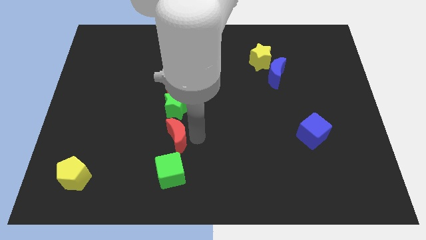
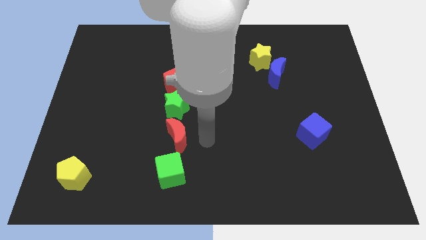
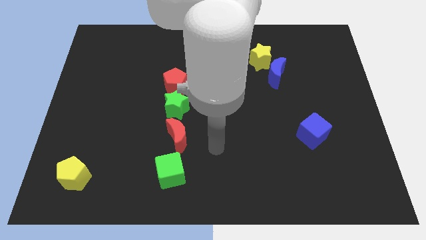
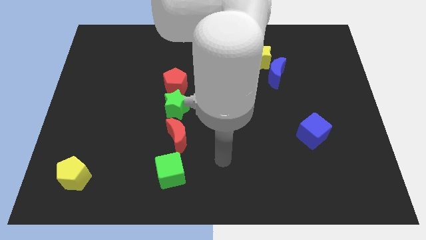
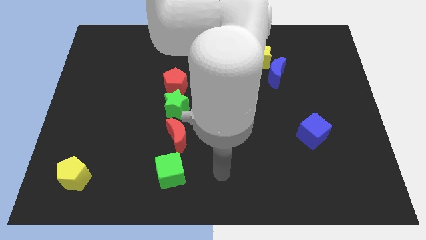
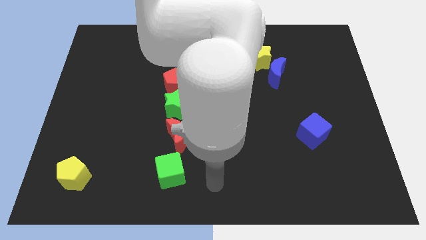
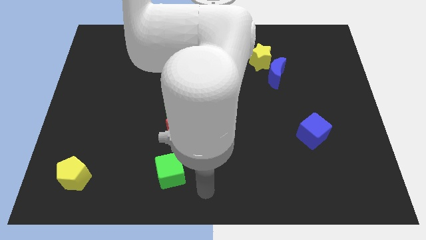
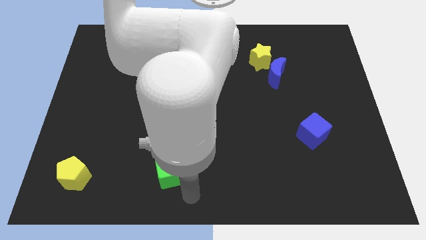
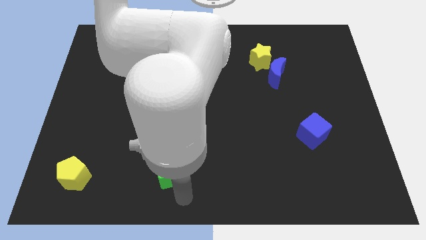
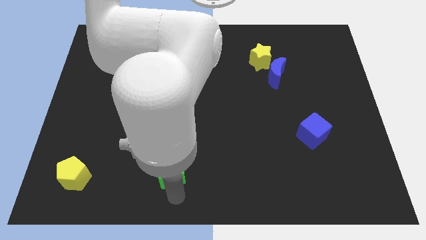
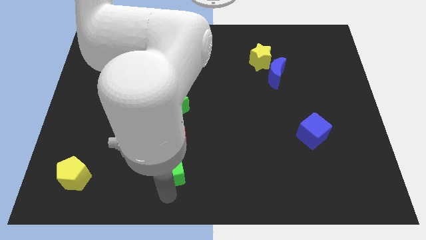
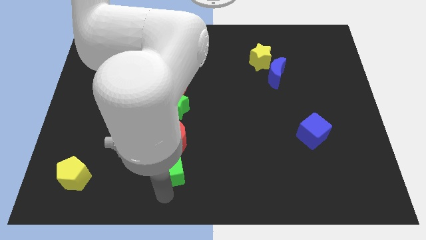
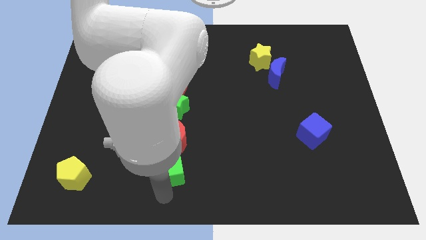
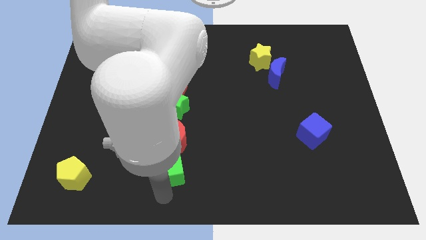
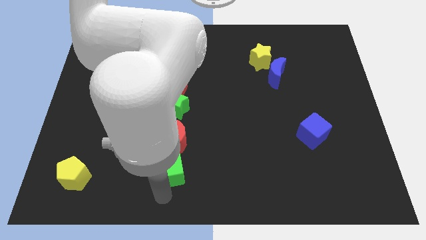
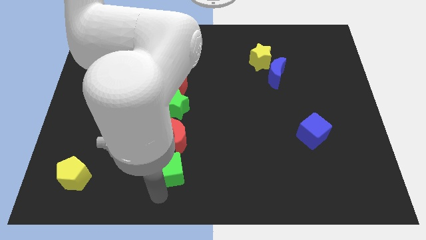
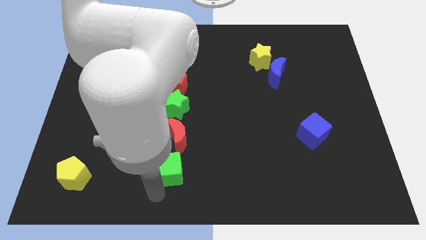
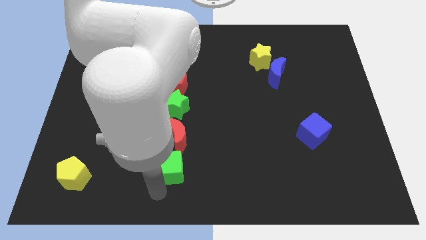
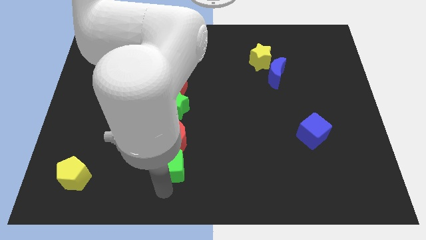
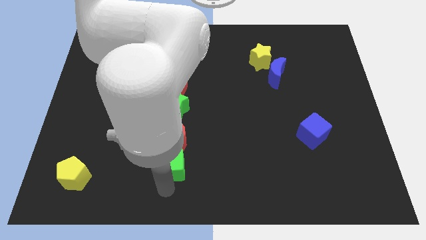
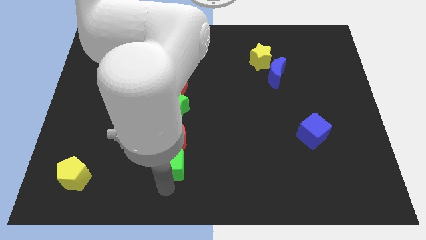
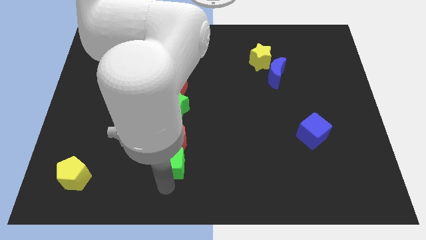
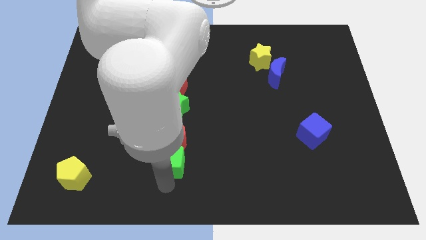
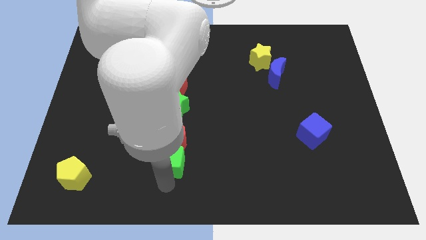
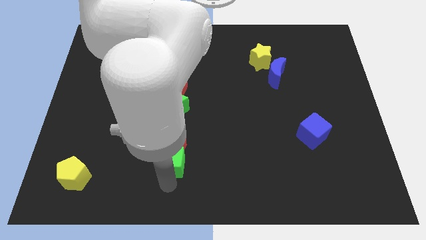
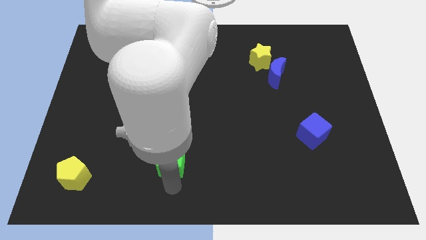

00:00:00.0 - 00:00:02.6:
slightly push the green cube below into the red crescent

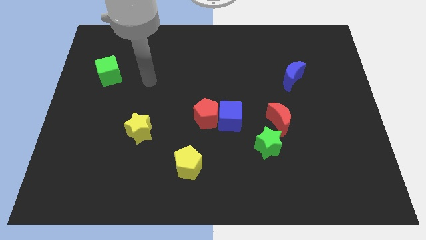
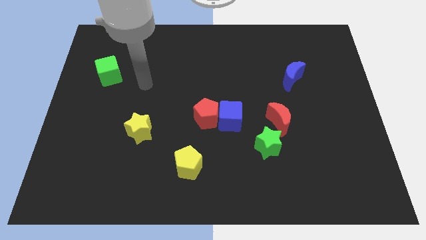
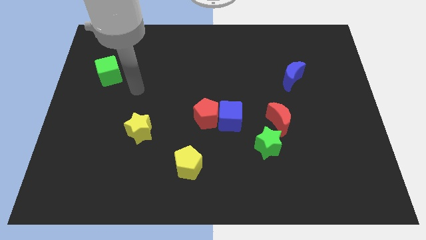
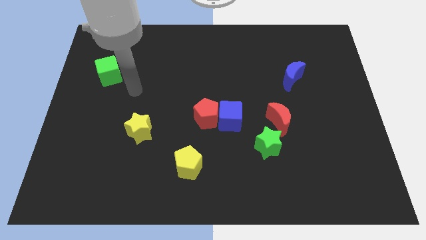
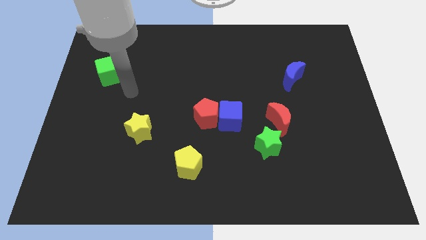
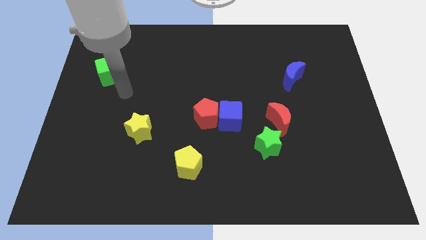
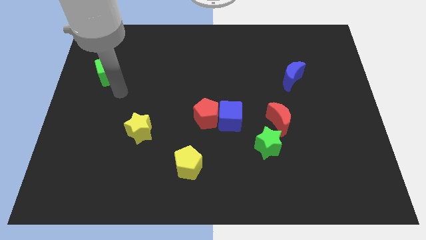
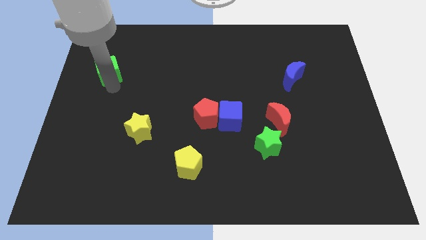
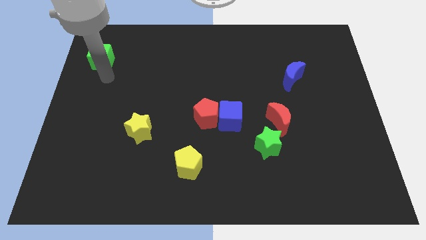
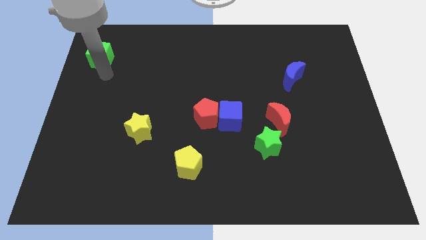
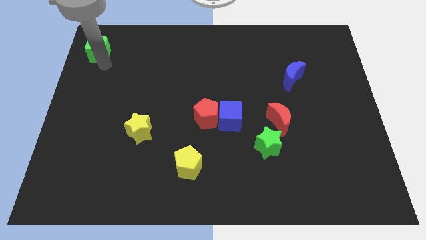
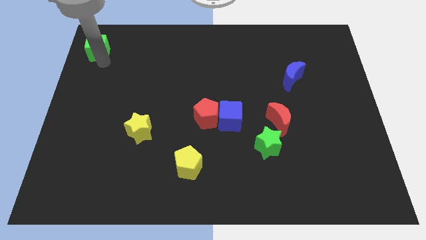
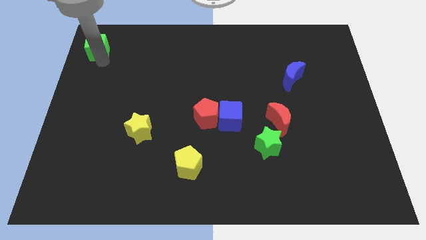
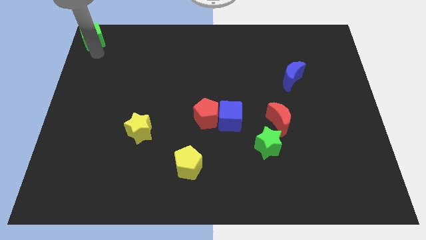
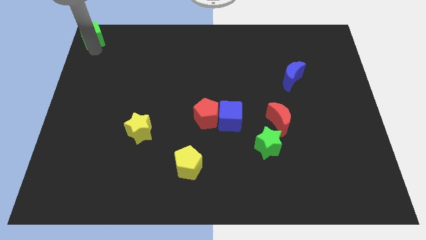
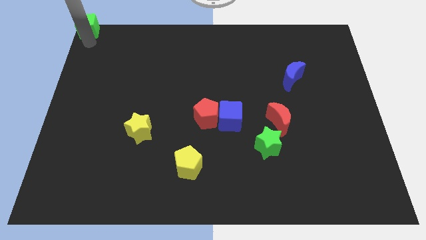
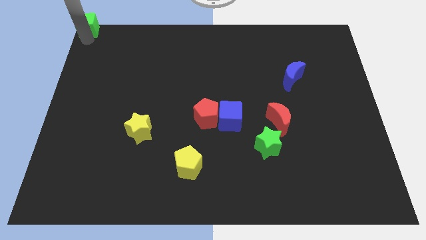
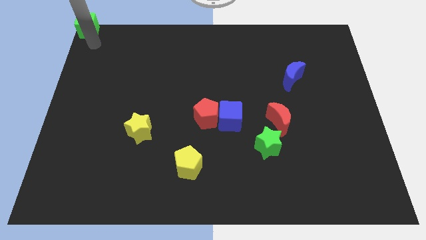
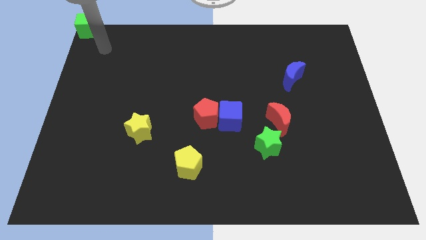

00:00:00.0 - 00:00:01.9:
move the green cube to the top left corner of the board

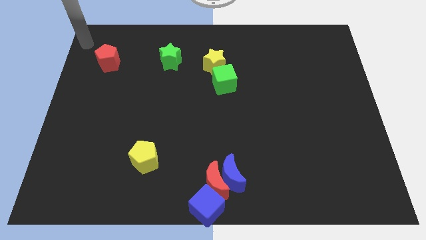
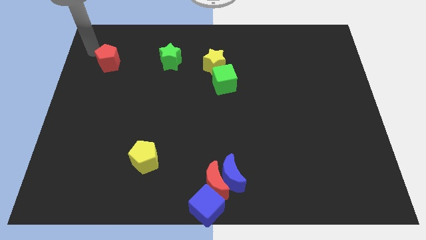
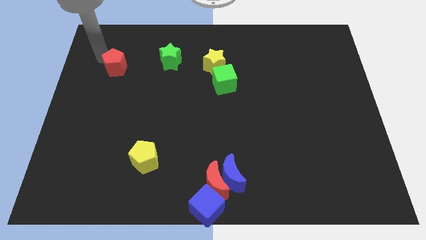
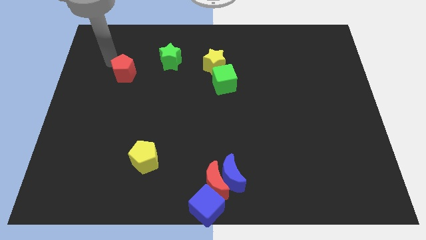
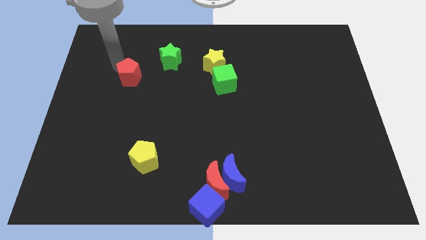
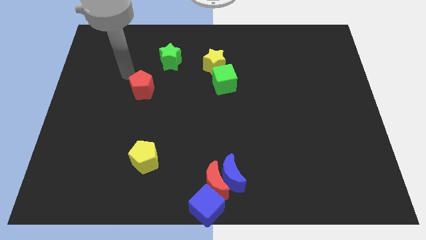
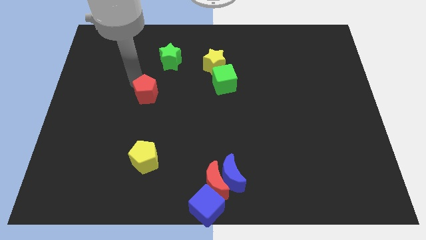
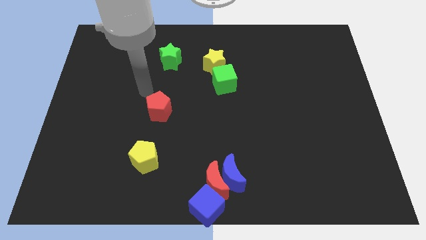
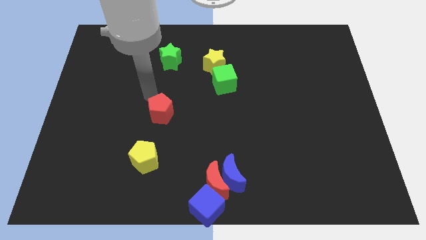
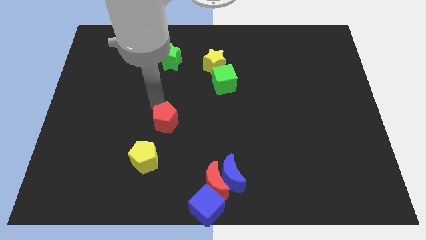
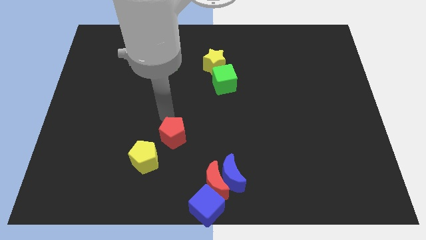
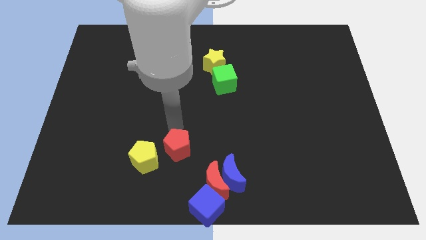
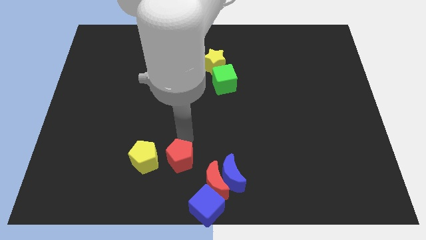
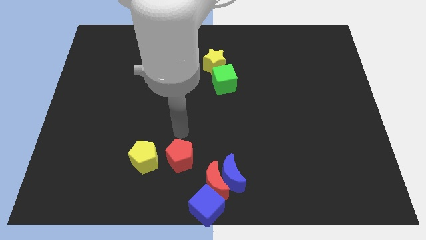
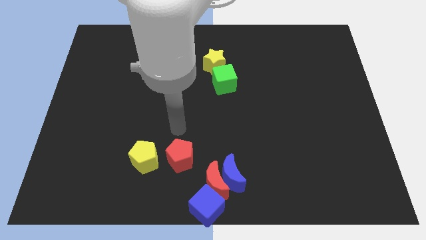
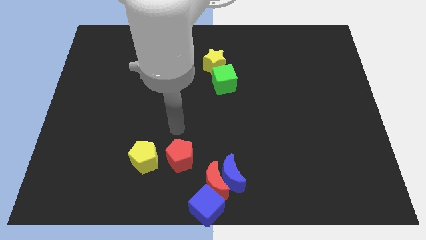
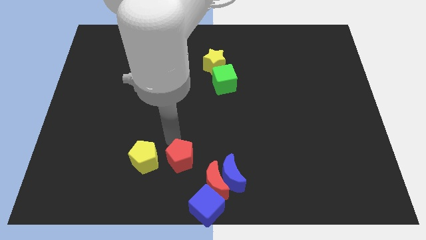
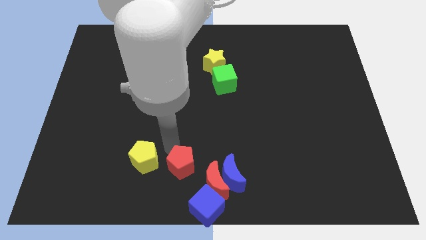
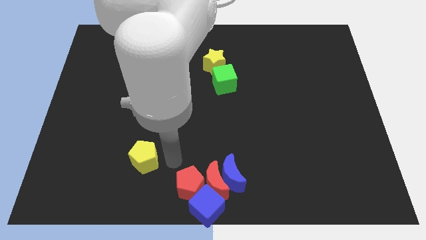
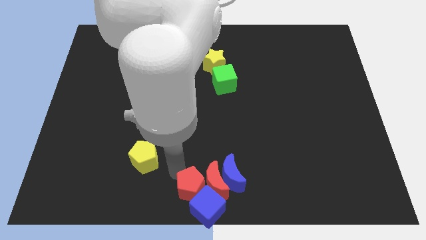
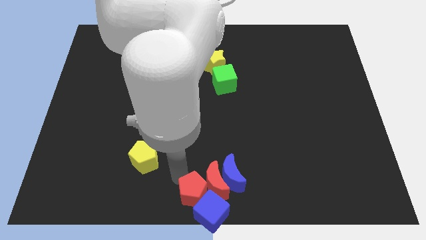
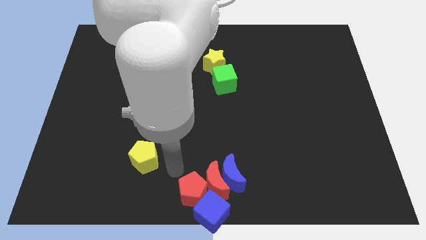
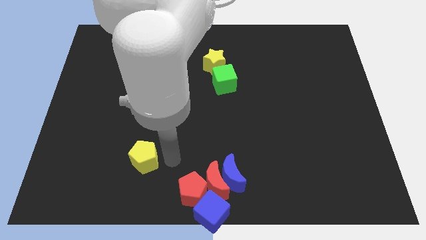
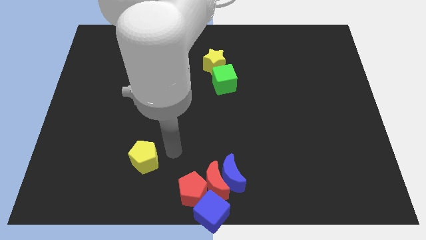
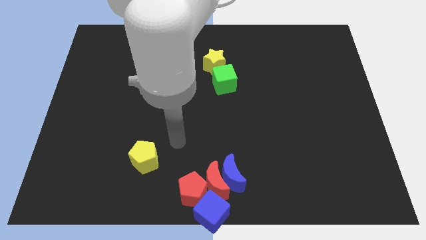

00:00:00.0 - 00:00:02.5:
move the red pentagon into blue cube on top

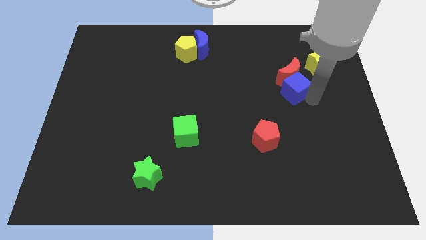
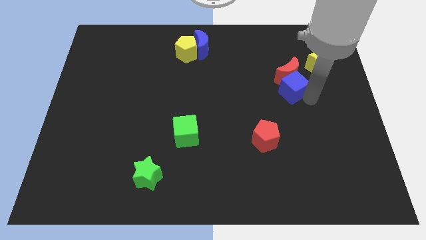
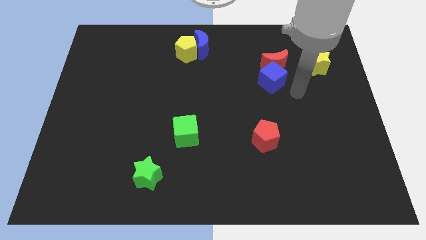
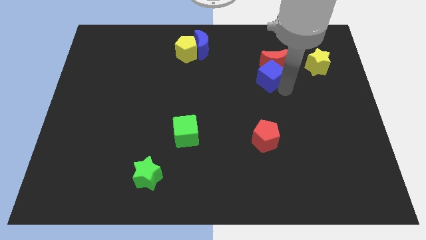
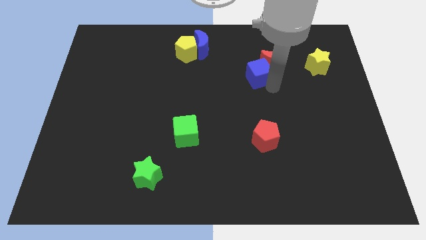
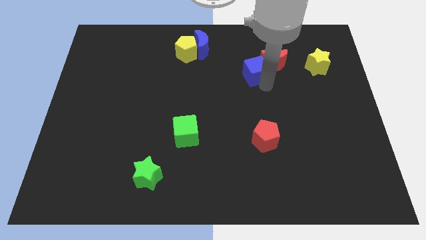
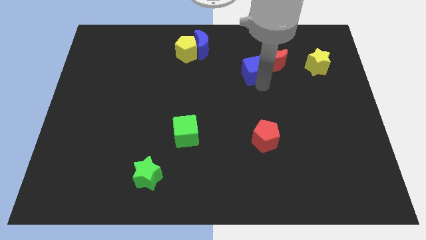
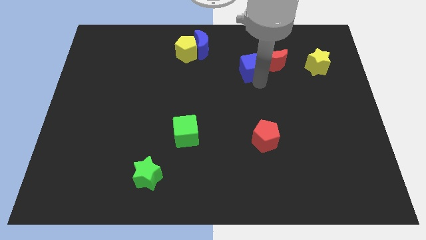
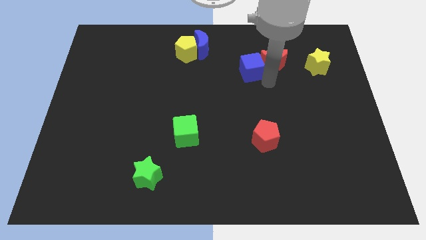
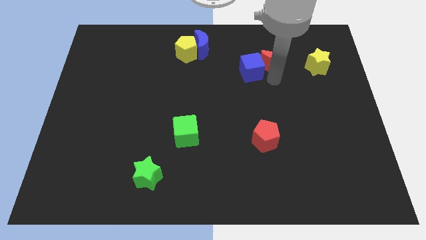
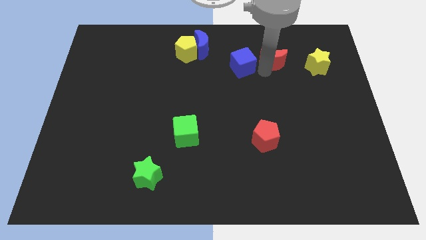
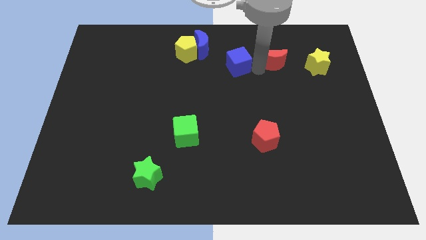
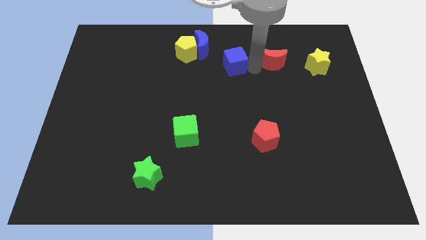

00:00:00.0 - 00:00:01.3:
push the blue cube to the left of the red crescent

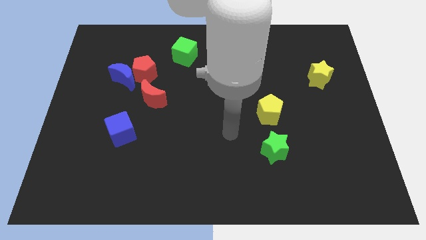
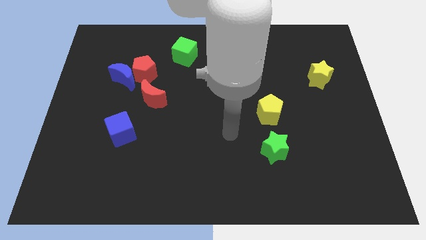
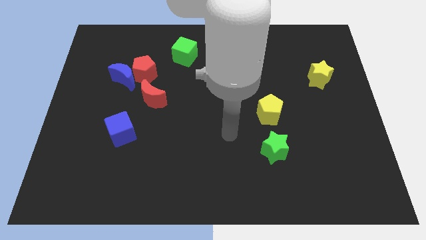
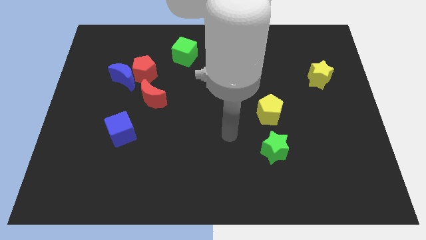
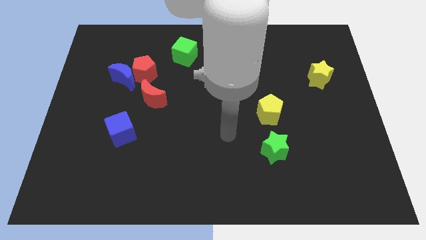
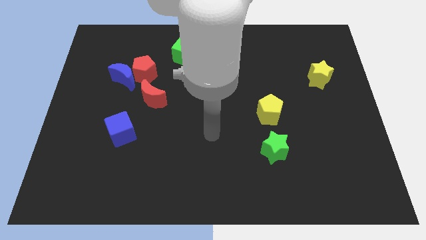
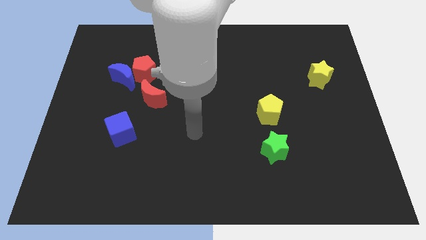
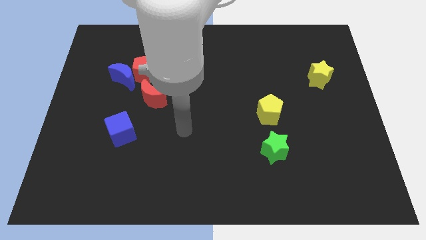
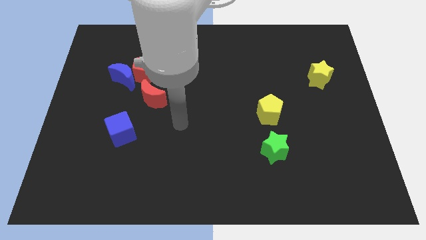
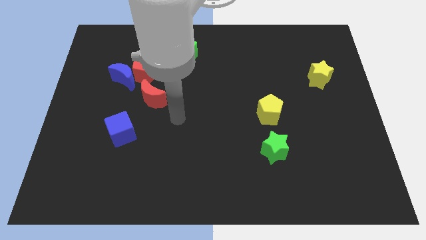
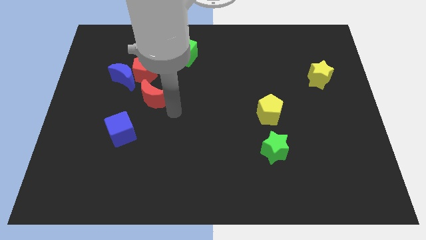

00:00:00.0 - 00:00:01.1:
move your arm close to red moon
